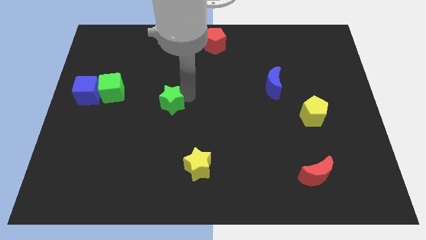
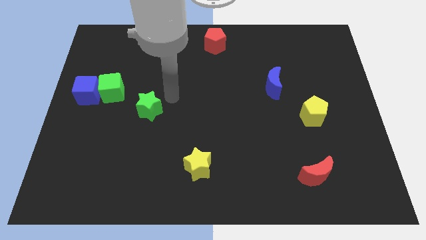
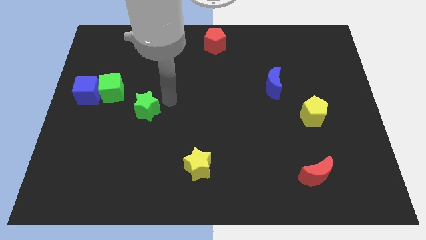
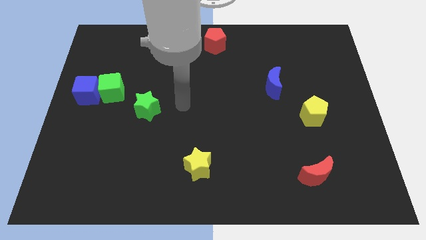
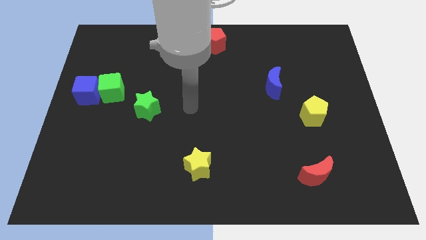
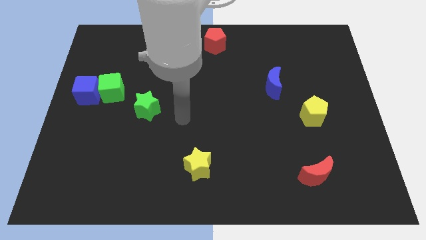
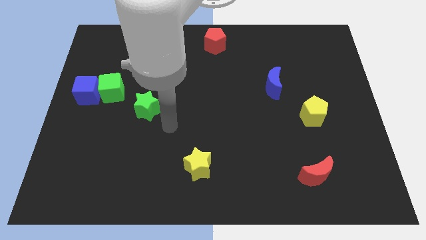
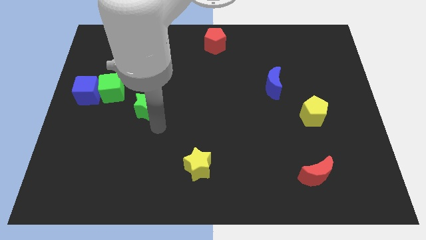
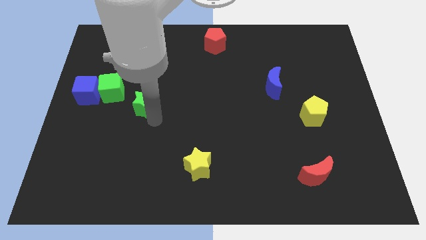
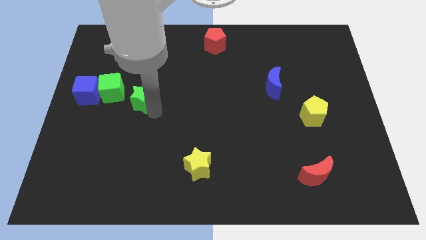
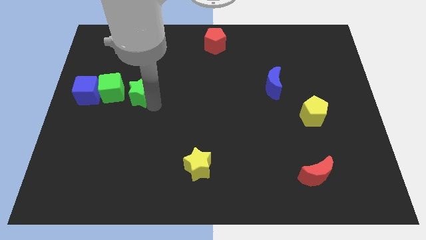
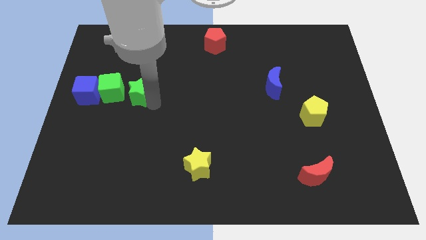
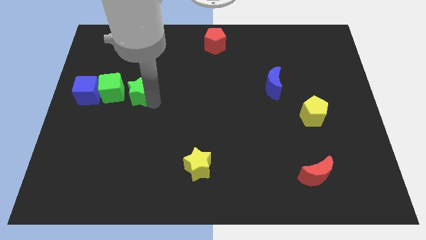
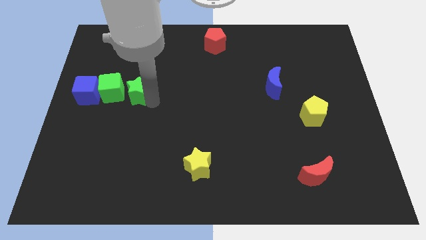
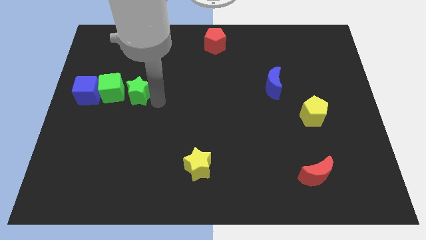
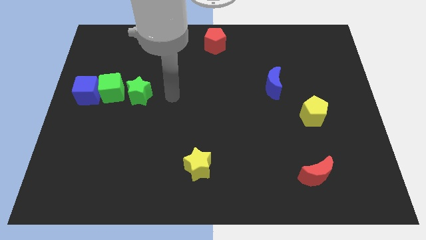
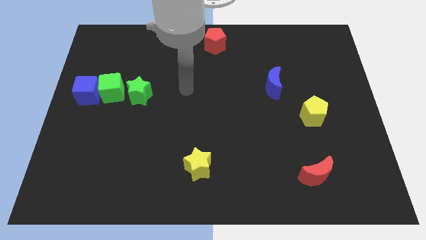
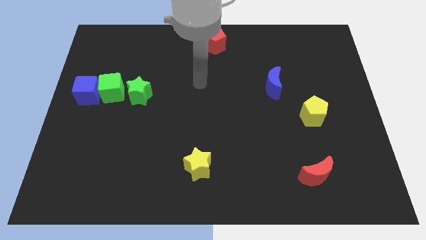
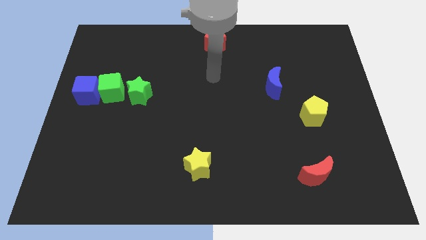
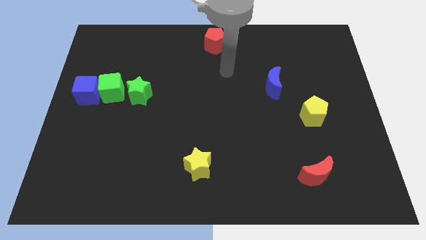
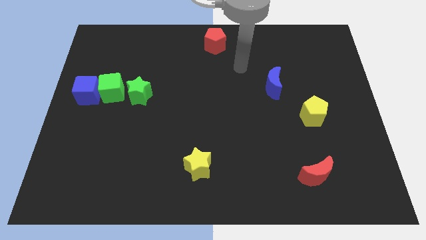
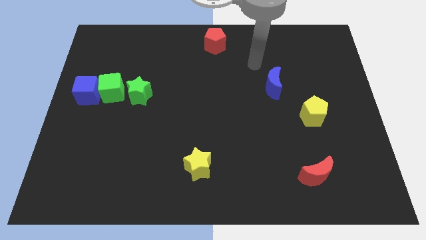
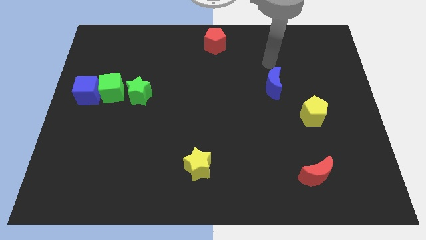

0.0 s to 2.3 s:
move green star adjacent to green cube

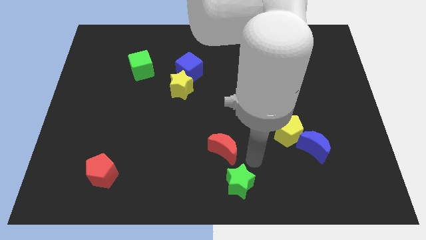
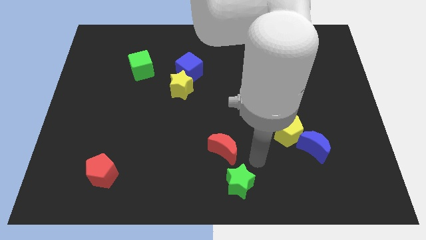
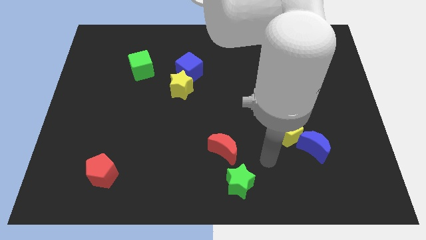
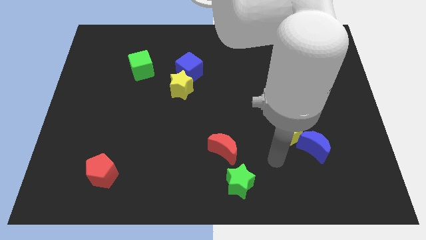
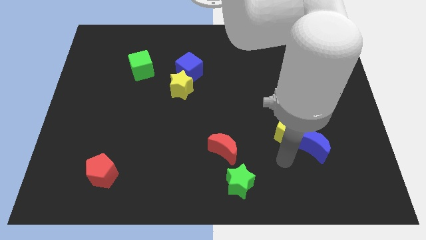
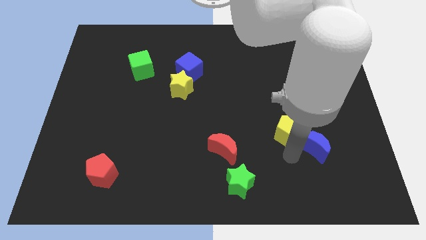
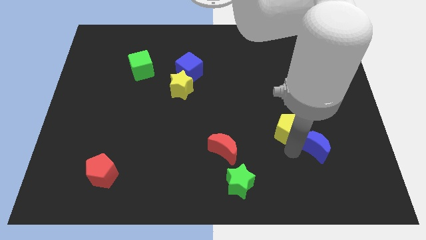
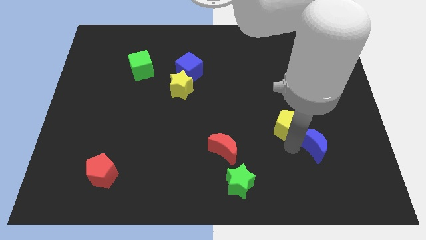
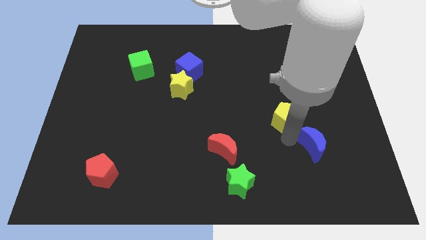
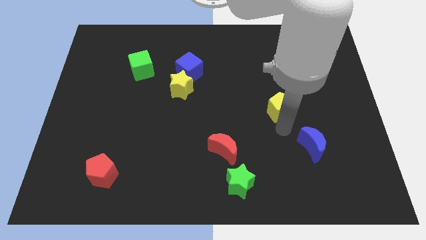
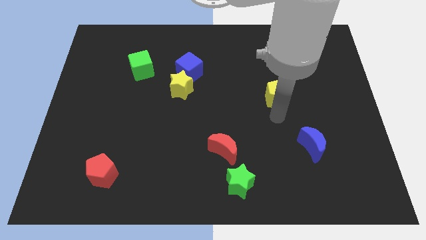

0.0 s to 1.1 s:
separate the yellow pentagon and the blue moon

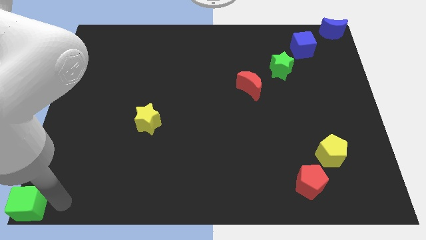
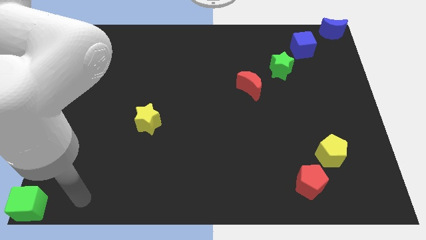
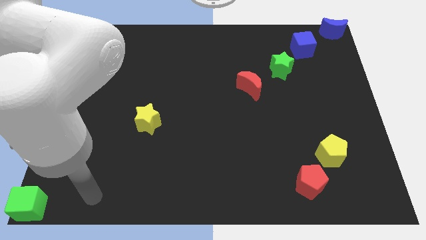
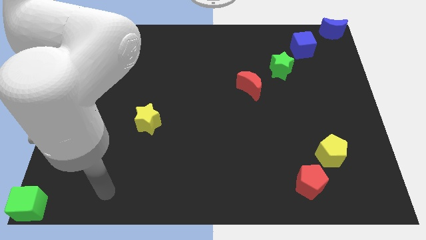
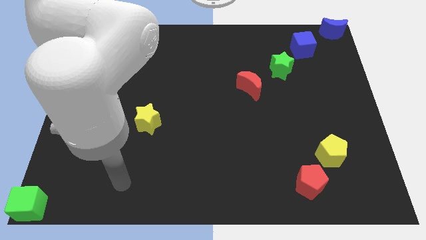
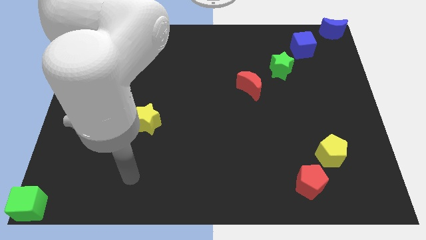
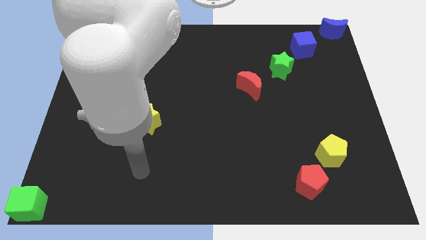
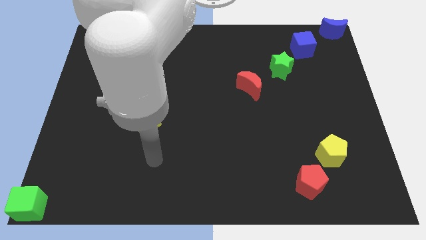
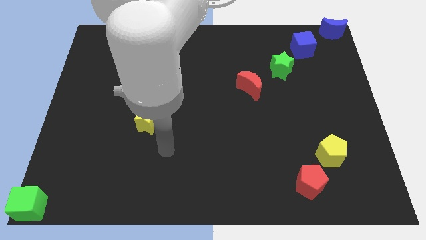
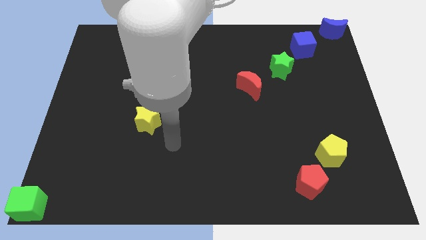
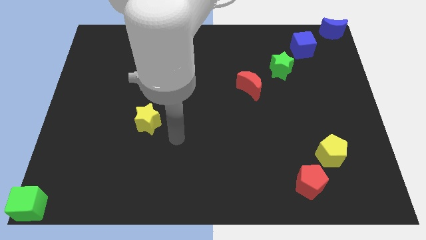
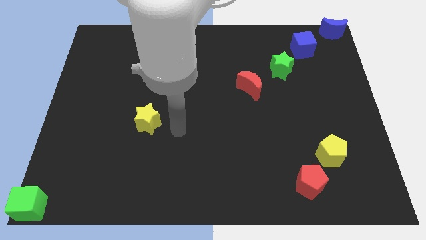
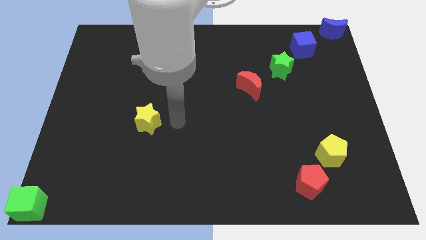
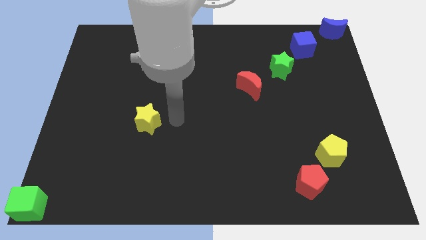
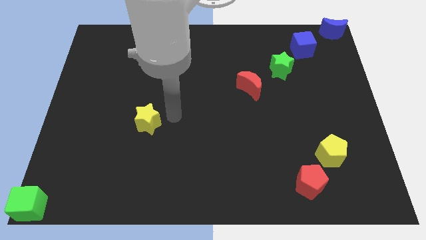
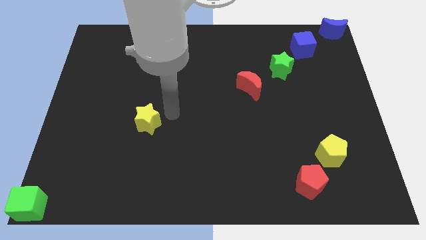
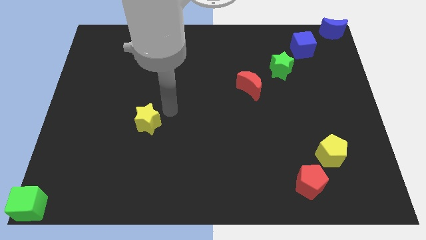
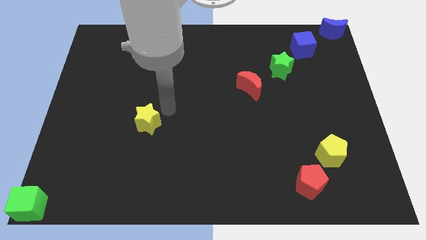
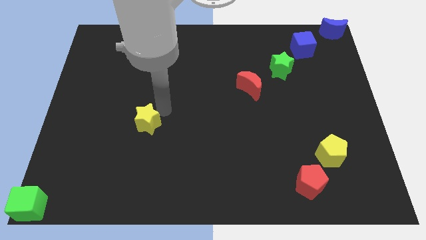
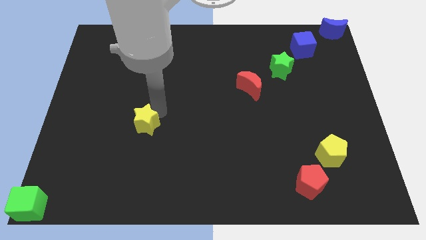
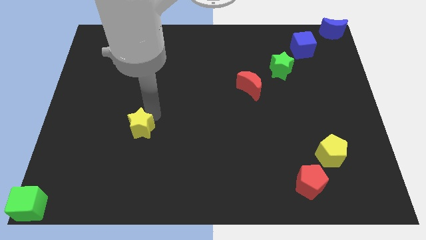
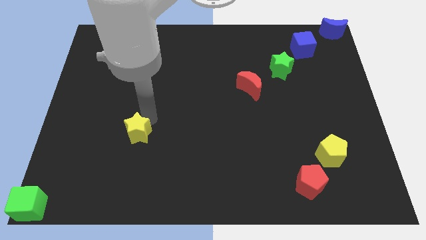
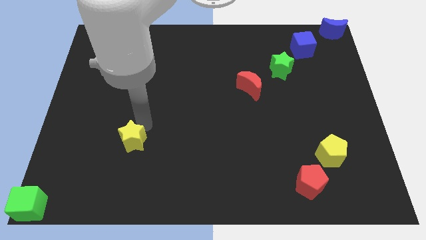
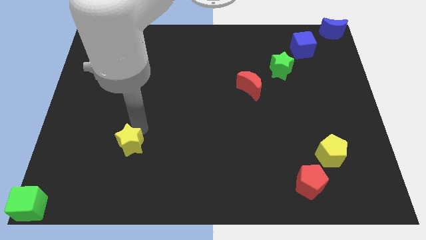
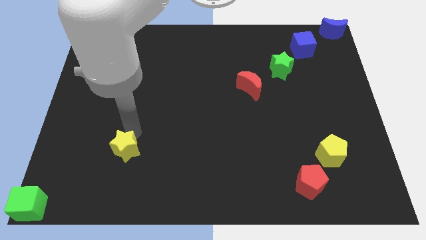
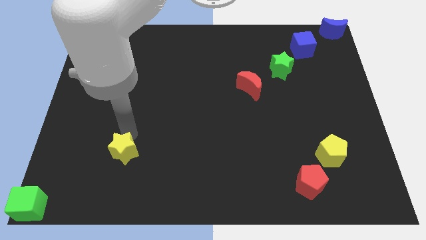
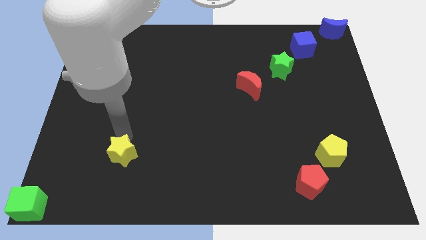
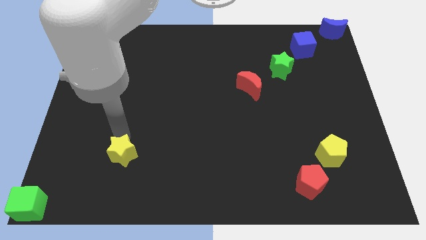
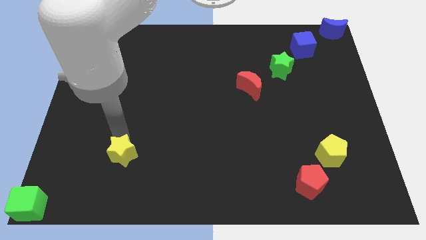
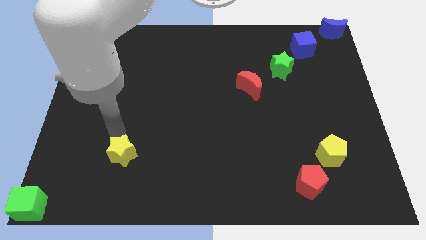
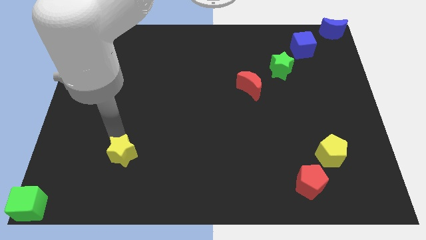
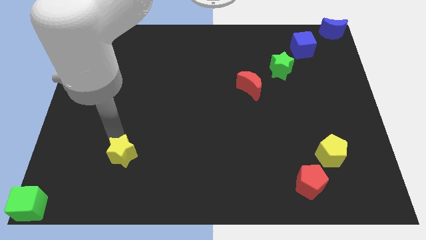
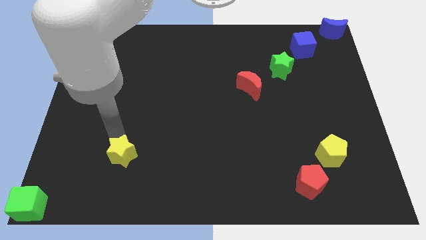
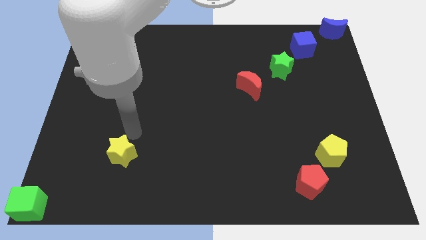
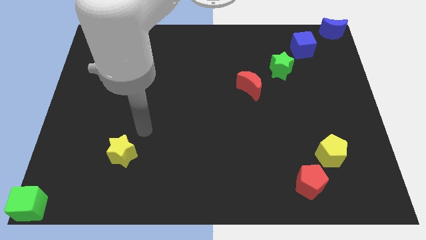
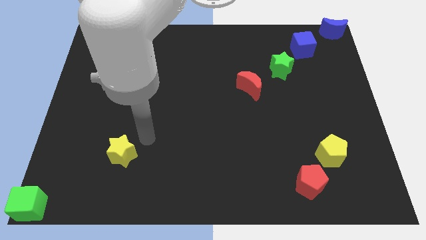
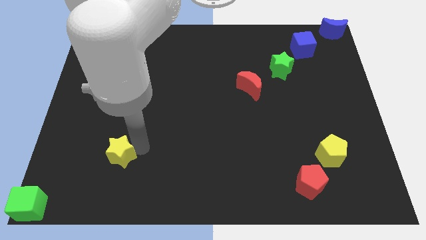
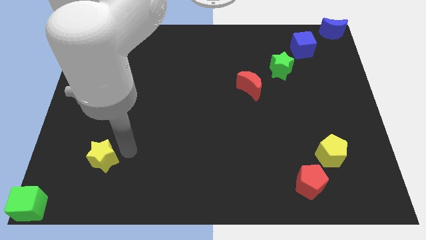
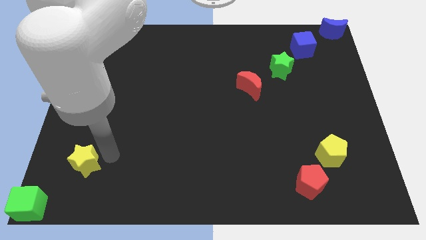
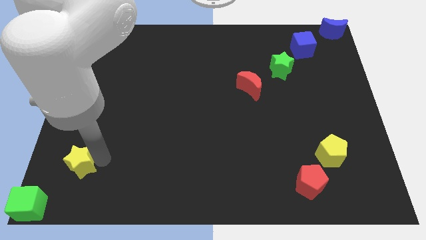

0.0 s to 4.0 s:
slide the yellow star towards the green cube

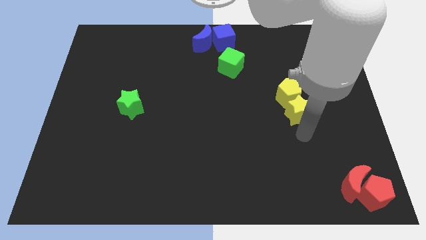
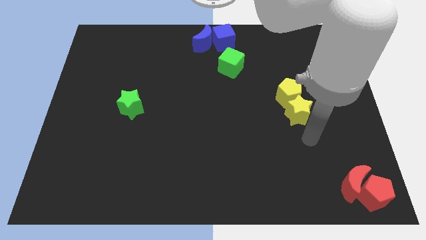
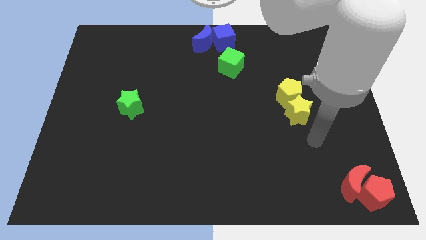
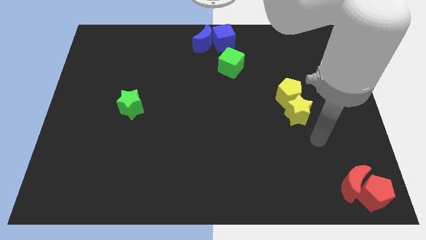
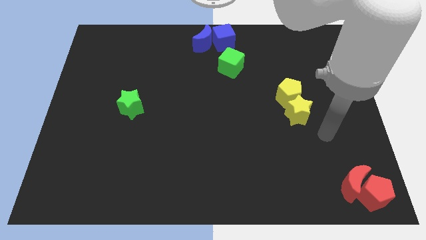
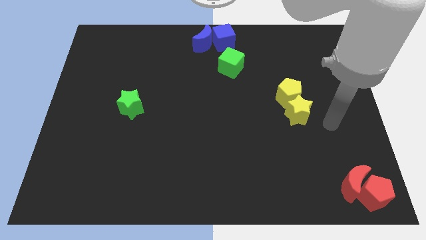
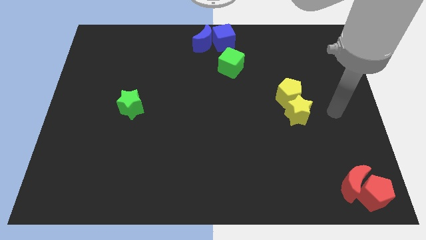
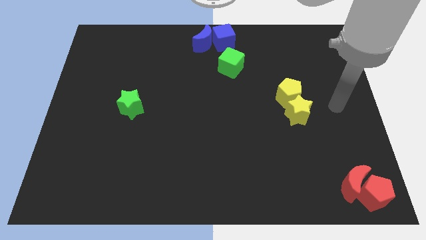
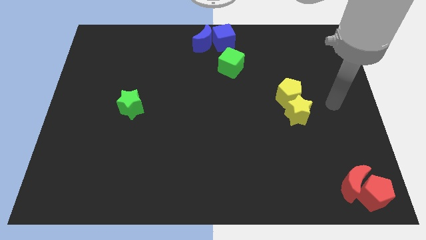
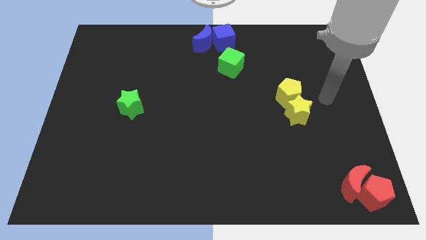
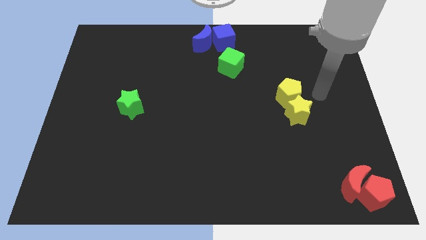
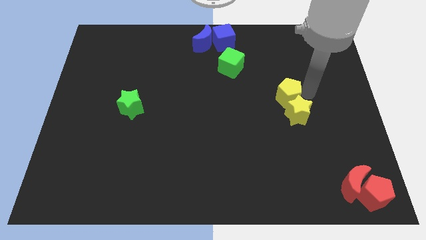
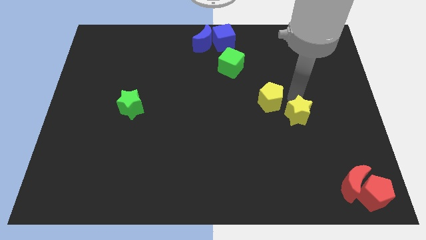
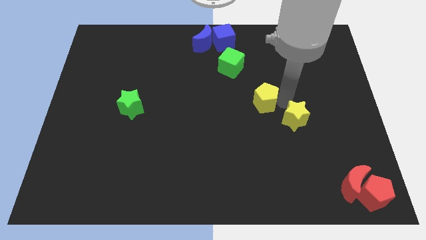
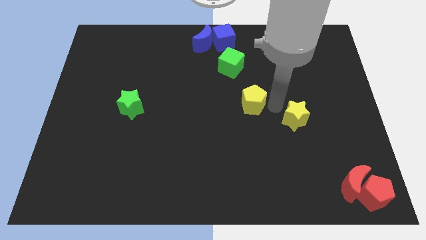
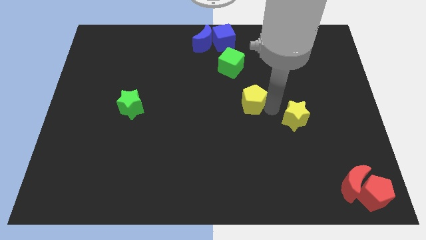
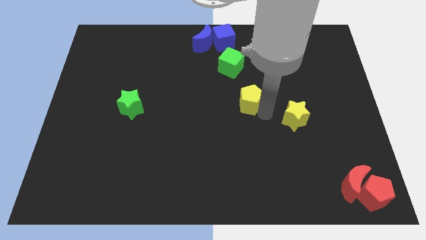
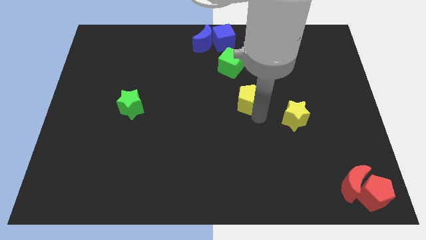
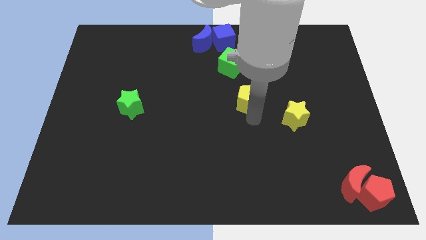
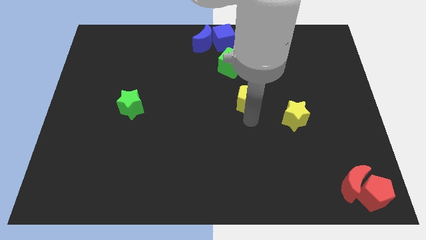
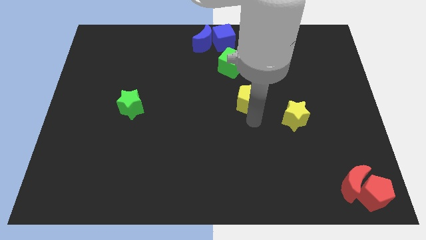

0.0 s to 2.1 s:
push the yellow pentagon to the left
